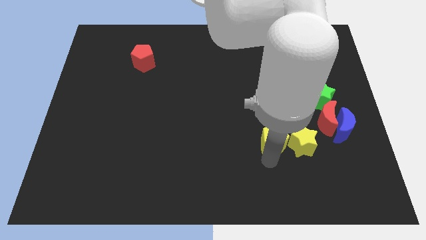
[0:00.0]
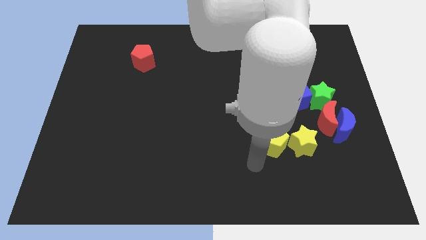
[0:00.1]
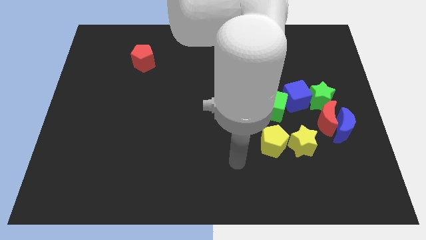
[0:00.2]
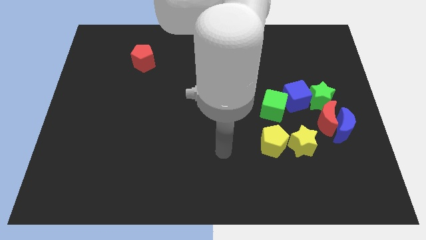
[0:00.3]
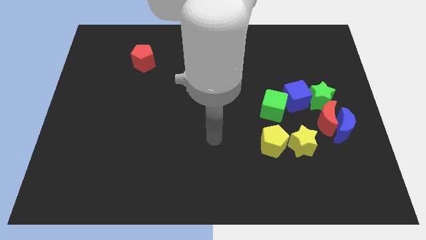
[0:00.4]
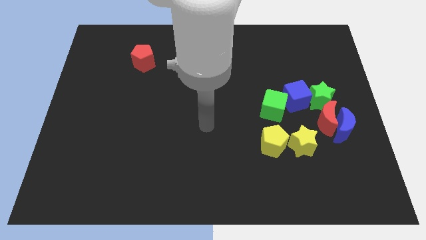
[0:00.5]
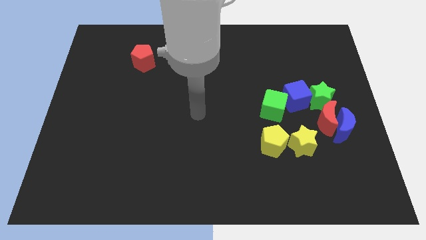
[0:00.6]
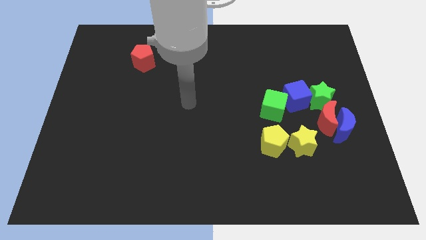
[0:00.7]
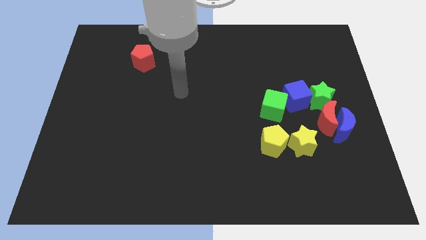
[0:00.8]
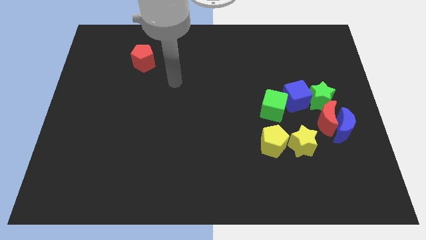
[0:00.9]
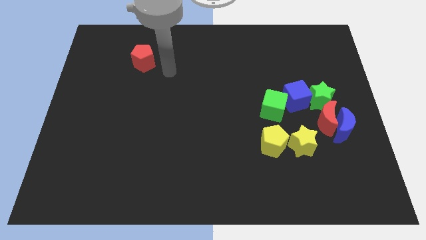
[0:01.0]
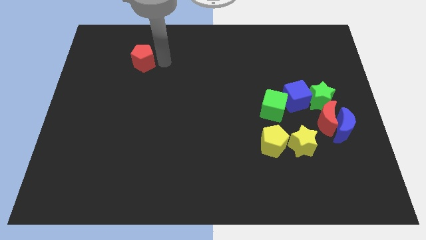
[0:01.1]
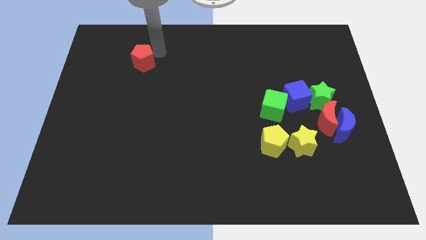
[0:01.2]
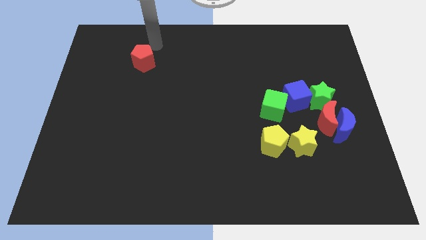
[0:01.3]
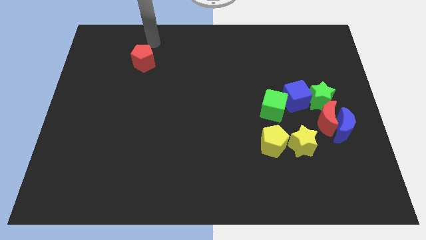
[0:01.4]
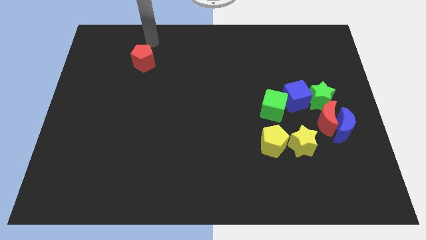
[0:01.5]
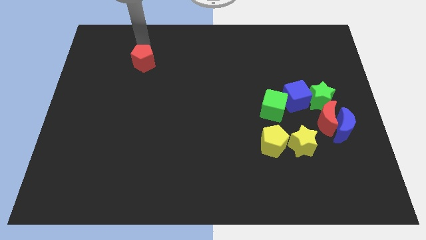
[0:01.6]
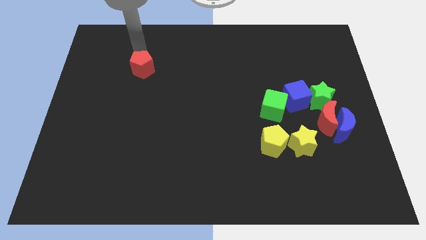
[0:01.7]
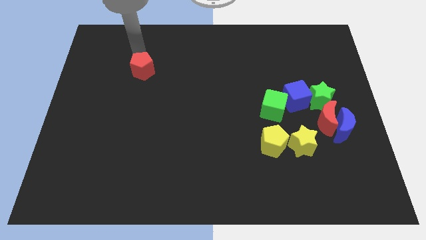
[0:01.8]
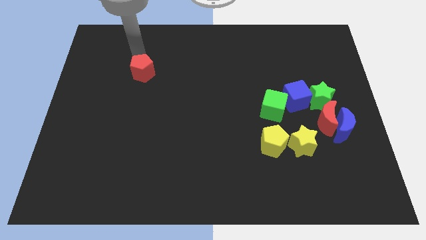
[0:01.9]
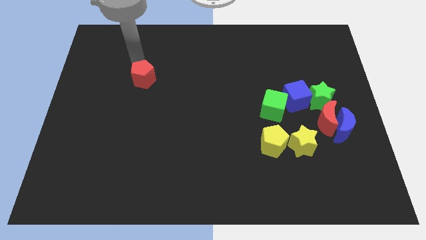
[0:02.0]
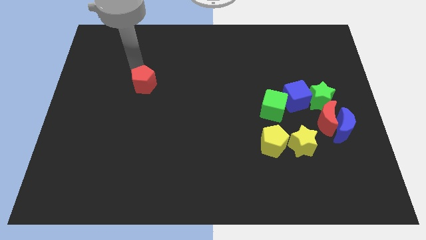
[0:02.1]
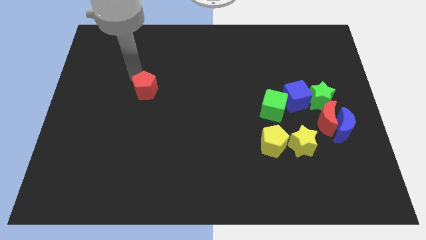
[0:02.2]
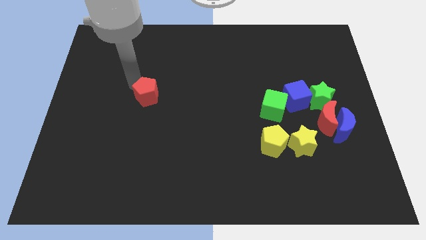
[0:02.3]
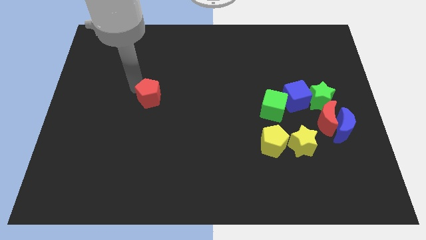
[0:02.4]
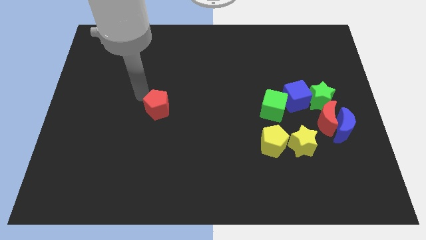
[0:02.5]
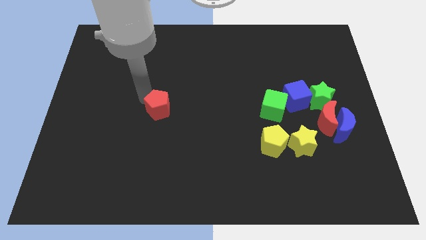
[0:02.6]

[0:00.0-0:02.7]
place red pentagon parallel green cube

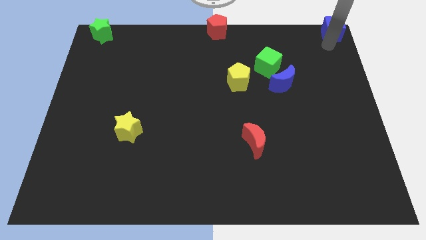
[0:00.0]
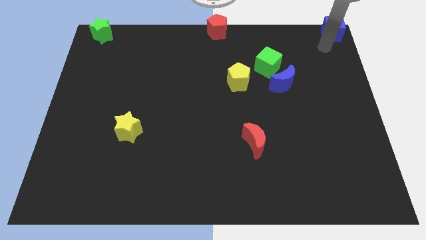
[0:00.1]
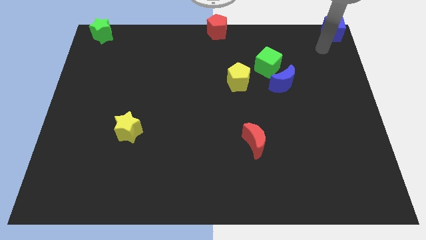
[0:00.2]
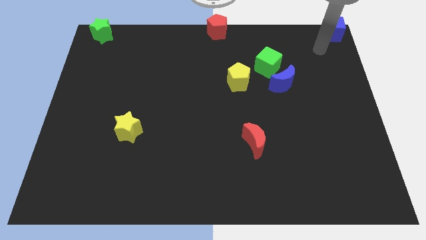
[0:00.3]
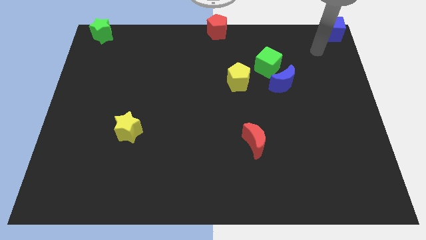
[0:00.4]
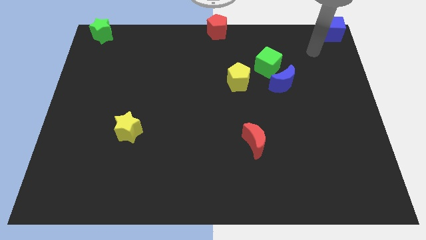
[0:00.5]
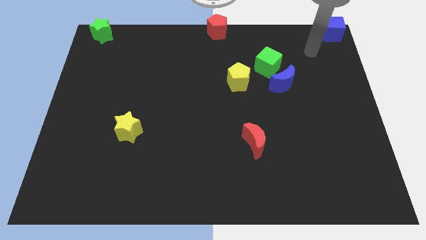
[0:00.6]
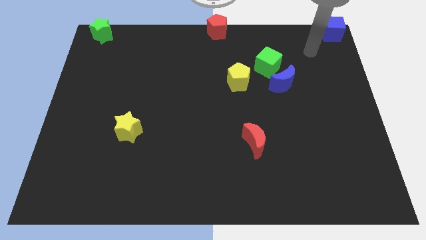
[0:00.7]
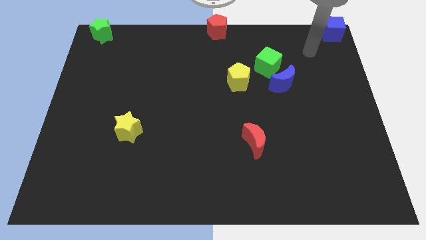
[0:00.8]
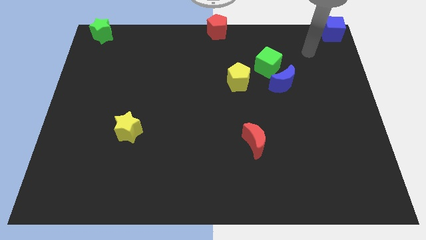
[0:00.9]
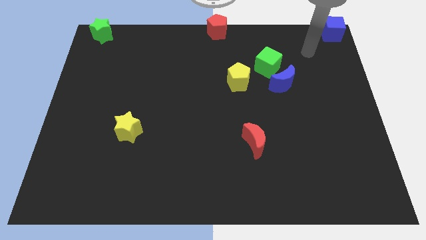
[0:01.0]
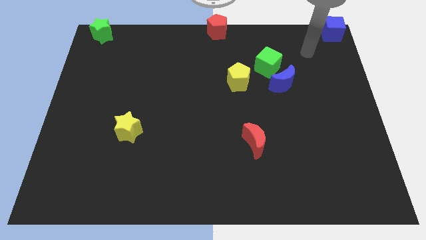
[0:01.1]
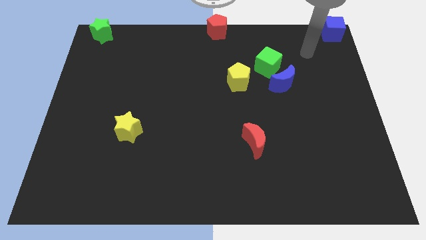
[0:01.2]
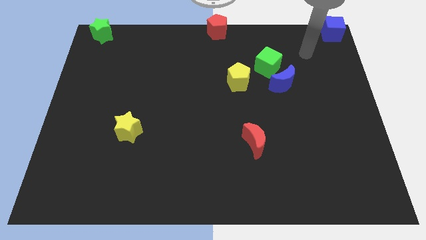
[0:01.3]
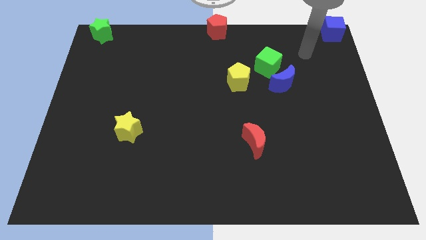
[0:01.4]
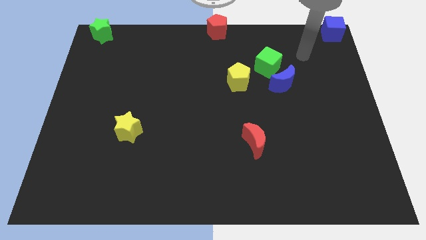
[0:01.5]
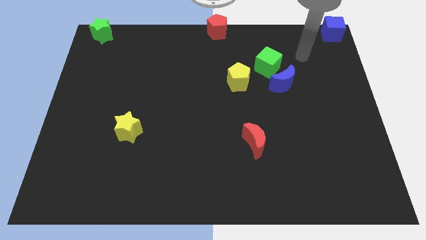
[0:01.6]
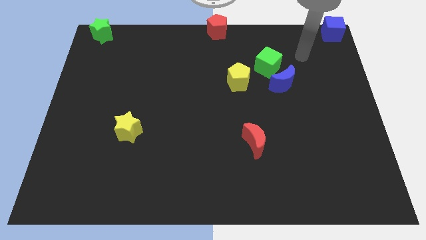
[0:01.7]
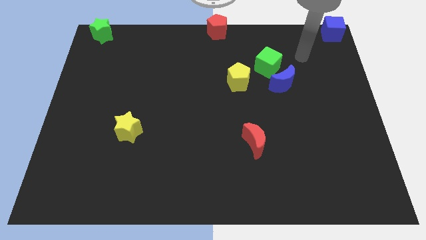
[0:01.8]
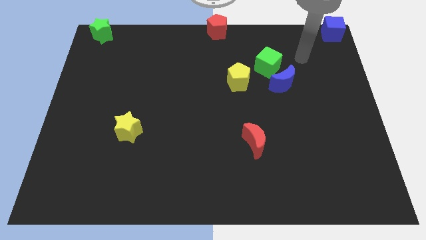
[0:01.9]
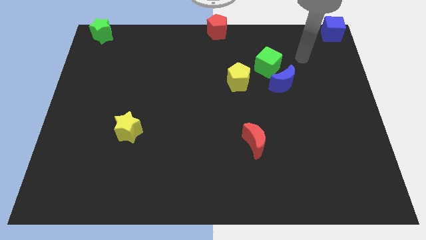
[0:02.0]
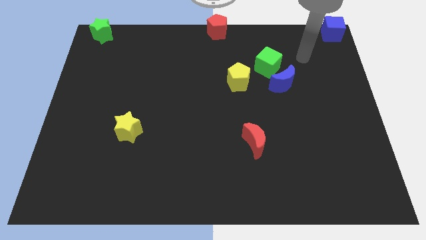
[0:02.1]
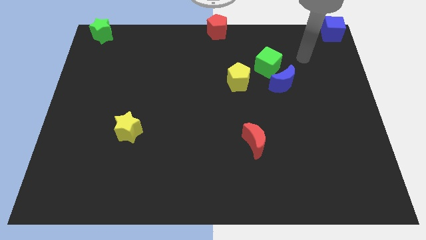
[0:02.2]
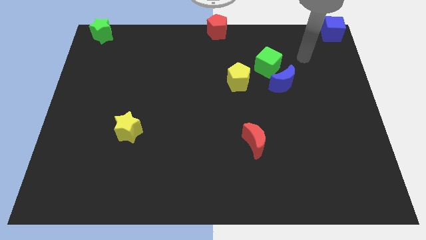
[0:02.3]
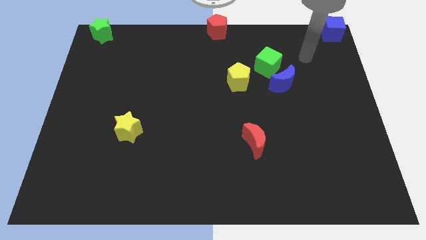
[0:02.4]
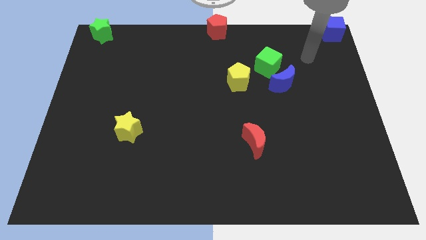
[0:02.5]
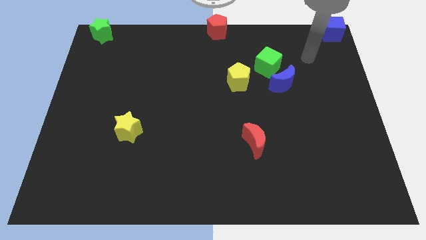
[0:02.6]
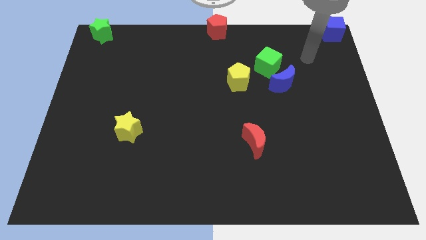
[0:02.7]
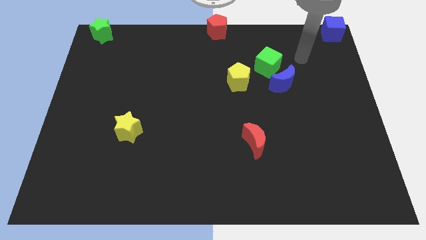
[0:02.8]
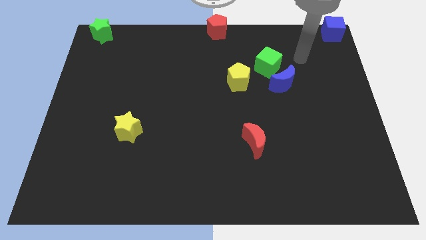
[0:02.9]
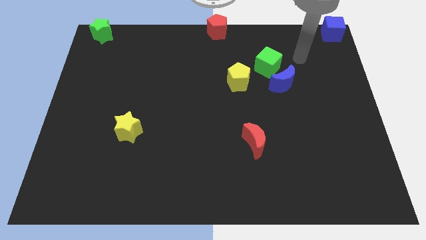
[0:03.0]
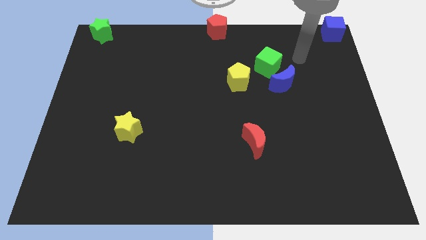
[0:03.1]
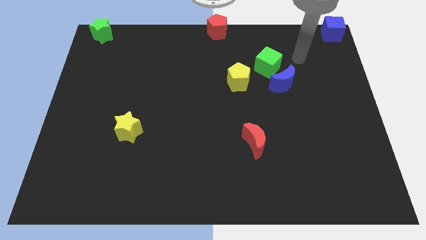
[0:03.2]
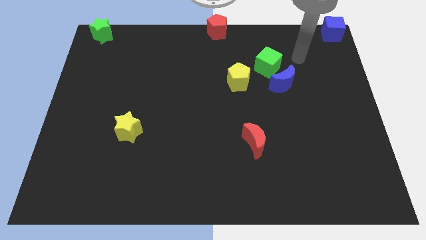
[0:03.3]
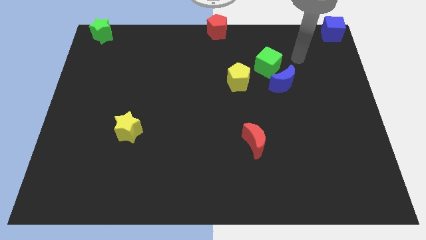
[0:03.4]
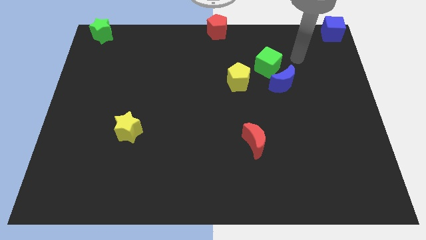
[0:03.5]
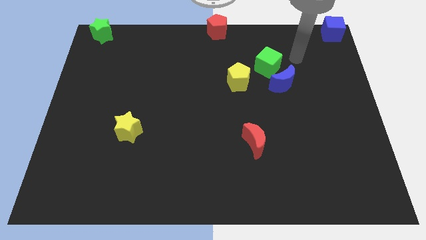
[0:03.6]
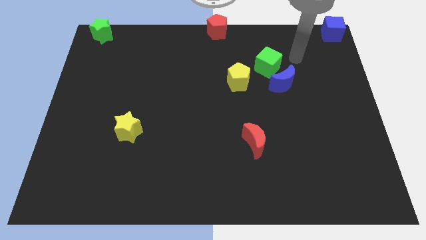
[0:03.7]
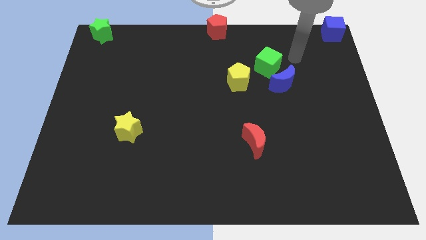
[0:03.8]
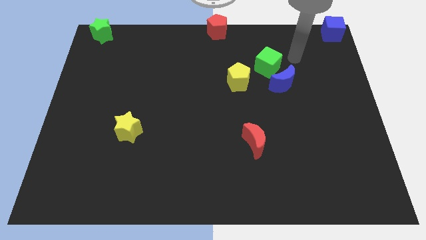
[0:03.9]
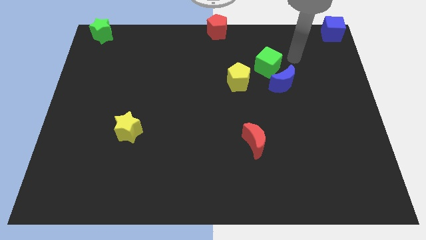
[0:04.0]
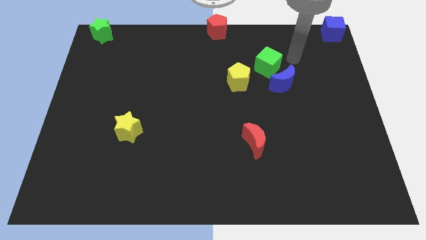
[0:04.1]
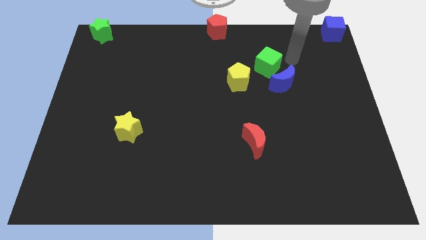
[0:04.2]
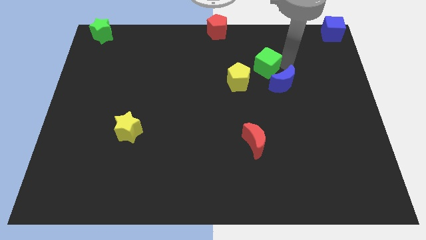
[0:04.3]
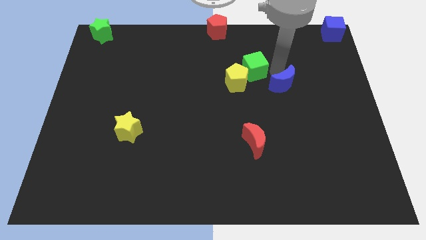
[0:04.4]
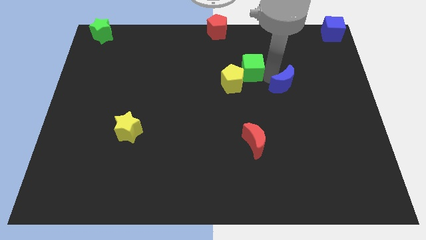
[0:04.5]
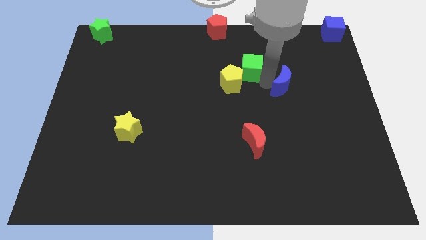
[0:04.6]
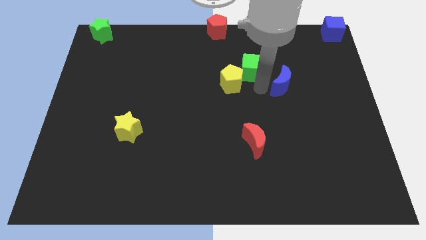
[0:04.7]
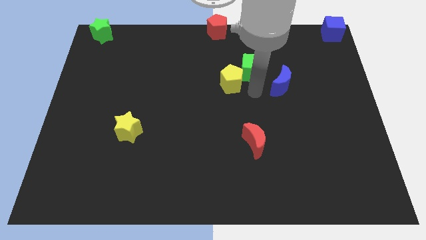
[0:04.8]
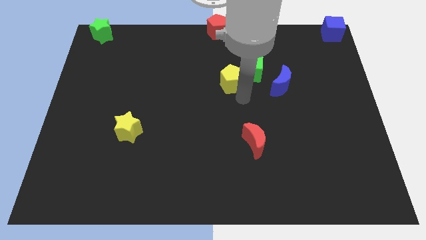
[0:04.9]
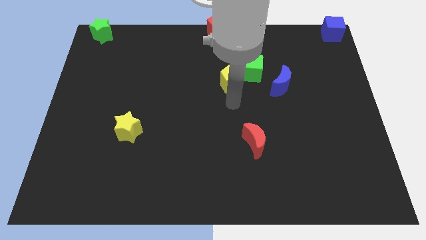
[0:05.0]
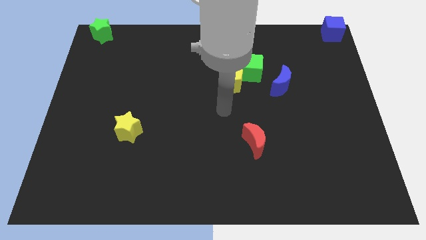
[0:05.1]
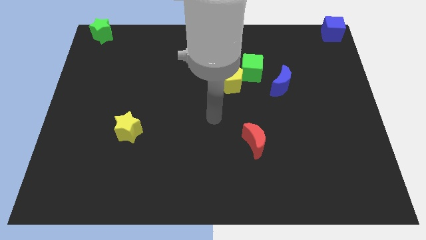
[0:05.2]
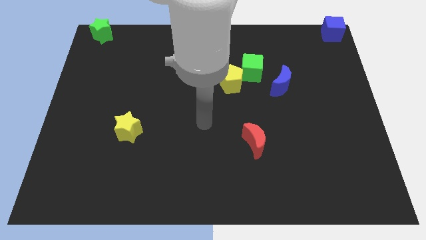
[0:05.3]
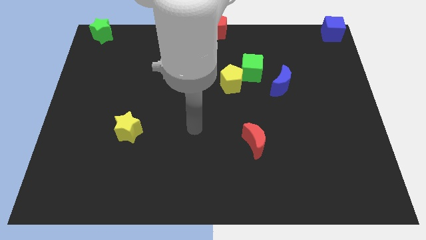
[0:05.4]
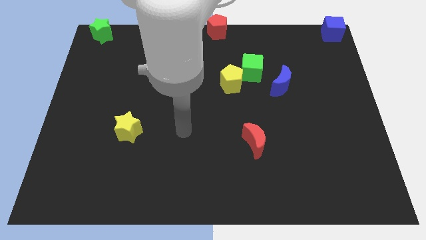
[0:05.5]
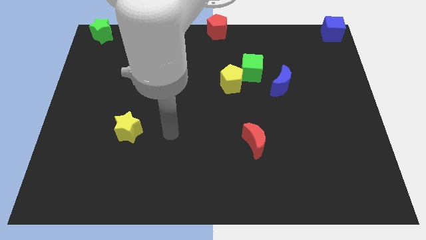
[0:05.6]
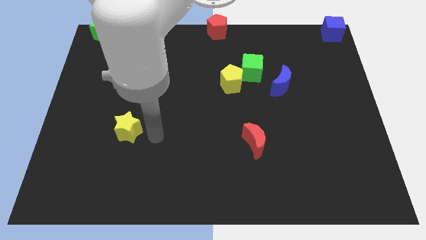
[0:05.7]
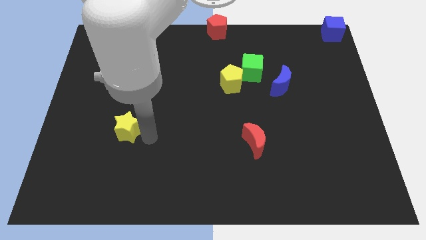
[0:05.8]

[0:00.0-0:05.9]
move the arm to the right of the yellow star

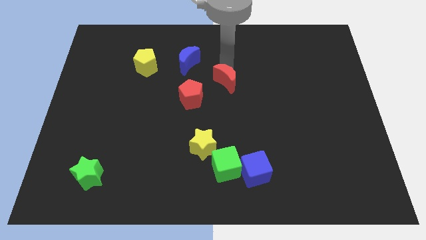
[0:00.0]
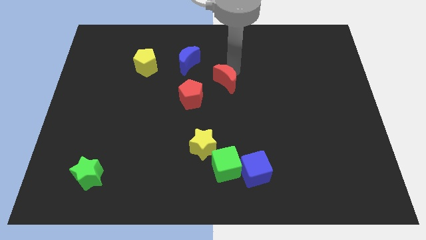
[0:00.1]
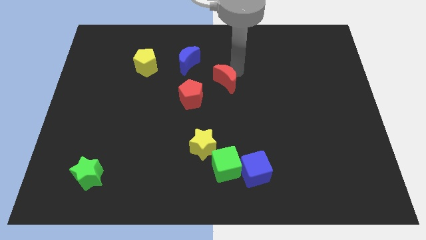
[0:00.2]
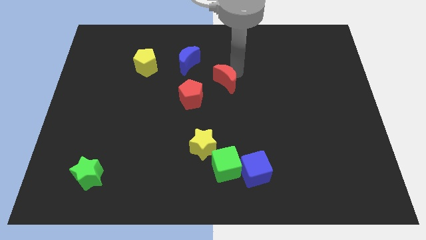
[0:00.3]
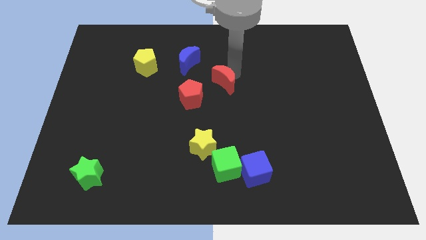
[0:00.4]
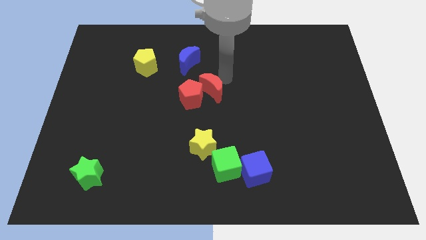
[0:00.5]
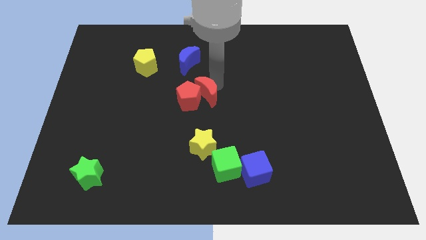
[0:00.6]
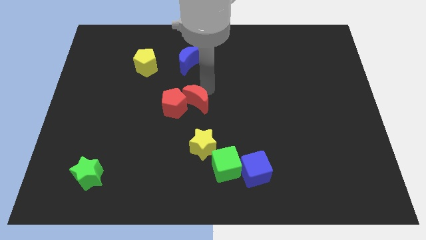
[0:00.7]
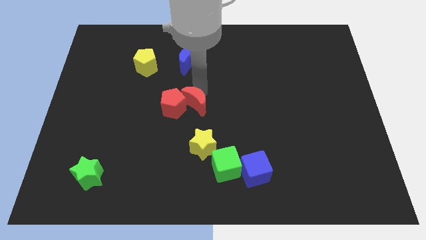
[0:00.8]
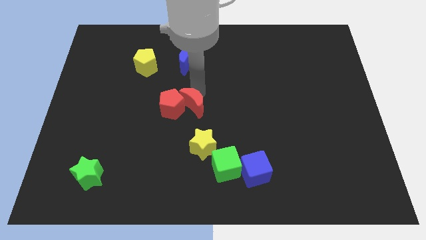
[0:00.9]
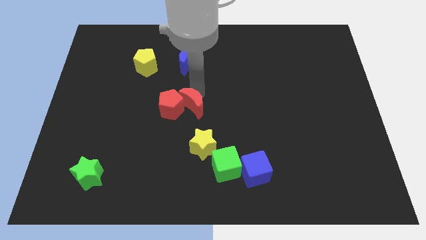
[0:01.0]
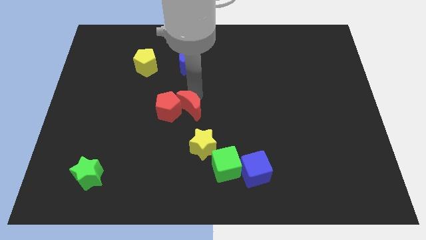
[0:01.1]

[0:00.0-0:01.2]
push red crescent into red pentagon
